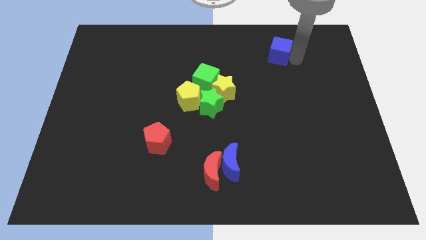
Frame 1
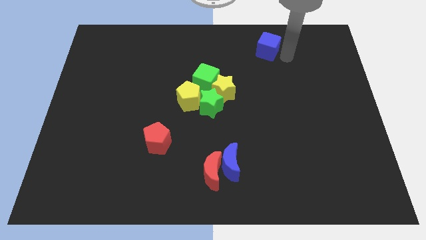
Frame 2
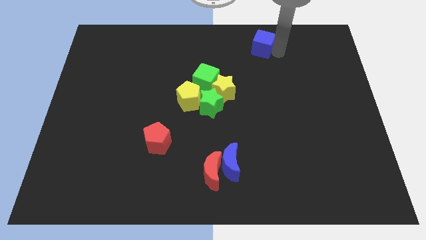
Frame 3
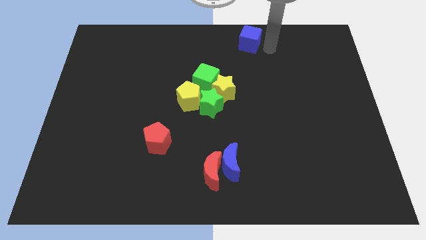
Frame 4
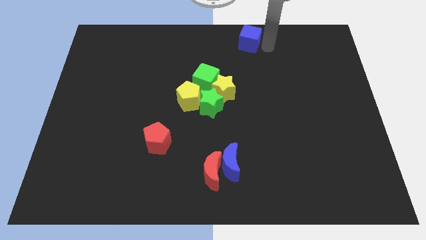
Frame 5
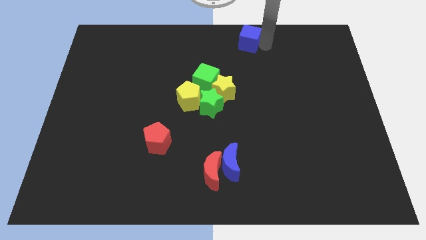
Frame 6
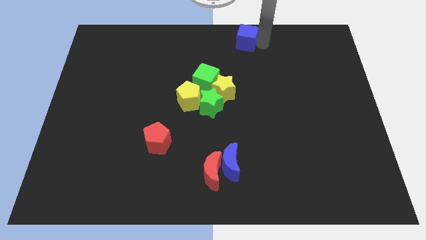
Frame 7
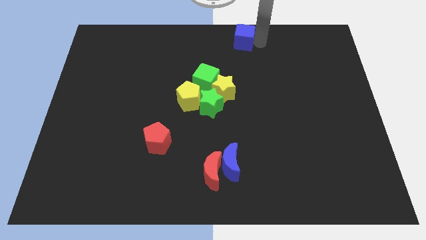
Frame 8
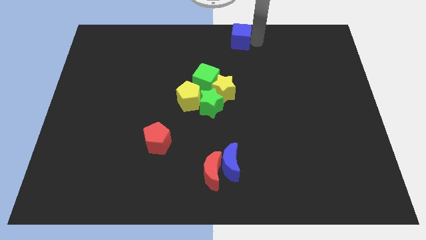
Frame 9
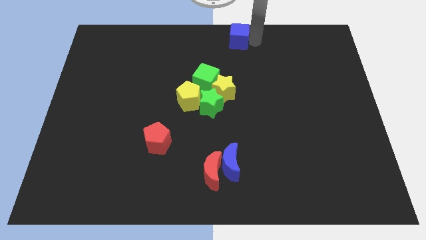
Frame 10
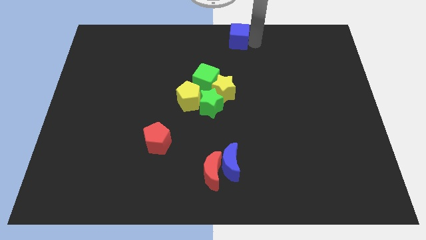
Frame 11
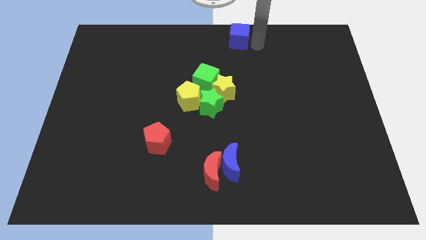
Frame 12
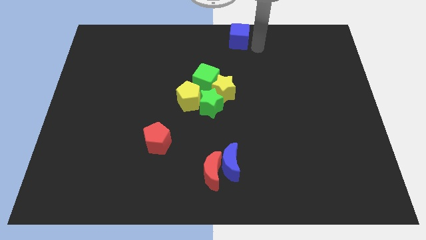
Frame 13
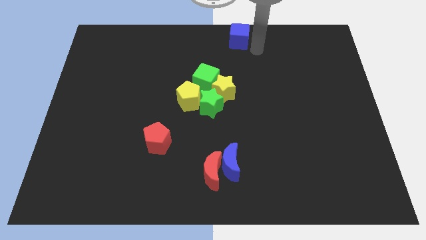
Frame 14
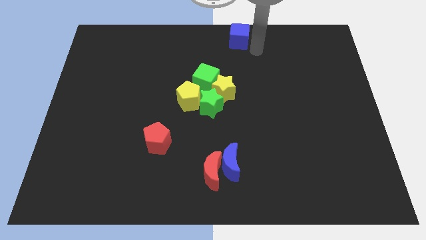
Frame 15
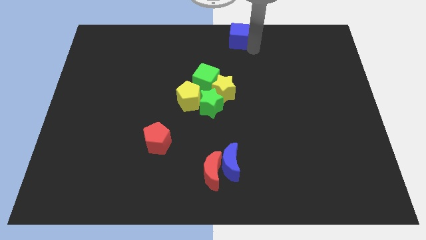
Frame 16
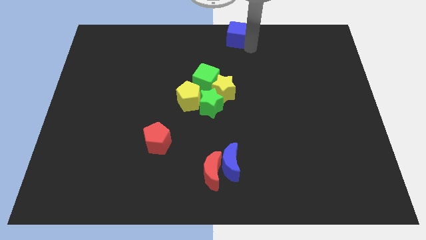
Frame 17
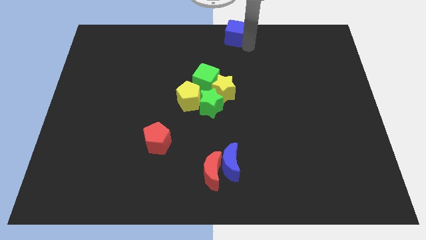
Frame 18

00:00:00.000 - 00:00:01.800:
push the blue cube at the top center of the board

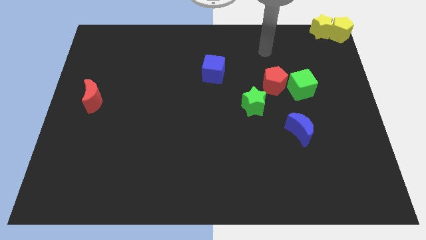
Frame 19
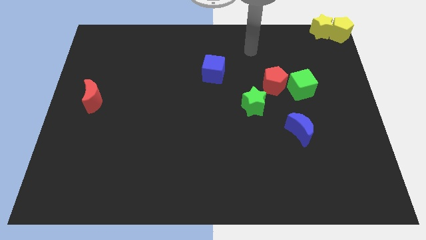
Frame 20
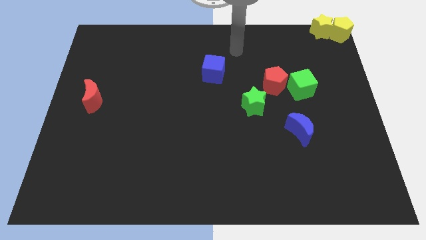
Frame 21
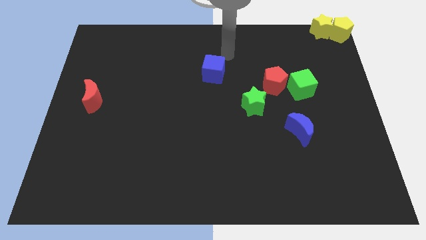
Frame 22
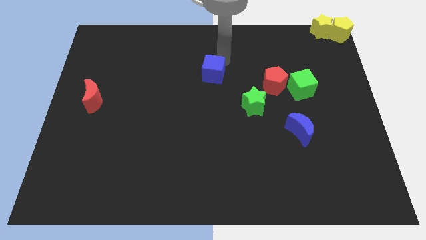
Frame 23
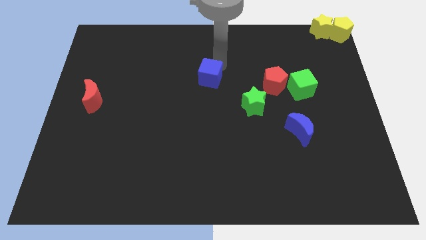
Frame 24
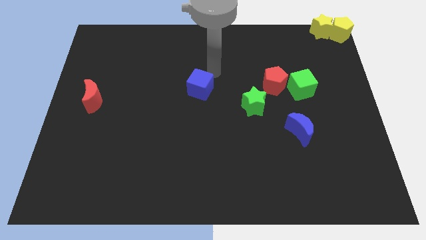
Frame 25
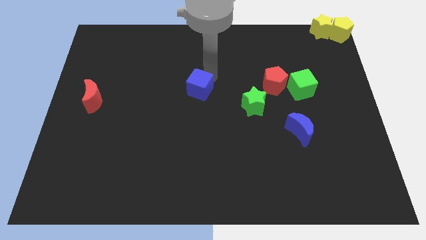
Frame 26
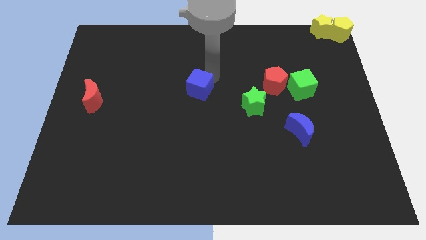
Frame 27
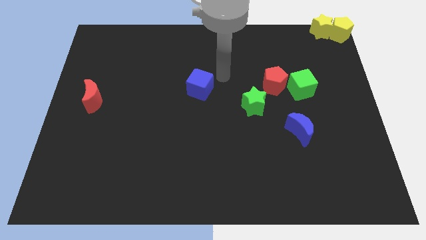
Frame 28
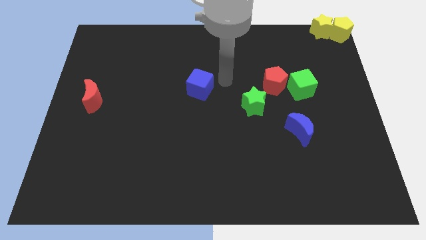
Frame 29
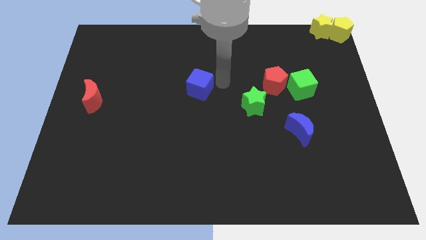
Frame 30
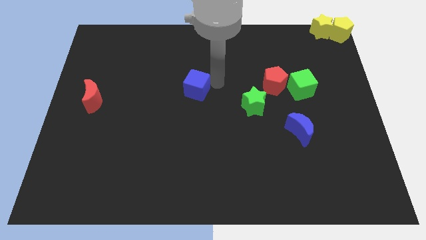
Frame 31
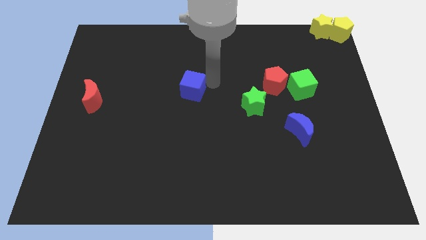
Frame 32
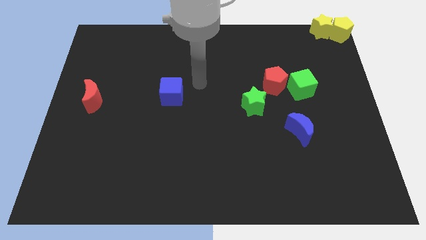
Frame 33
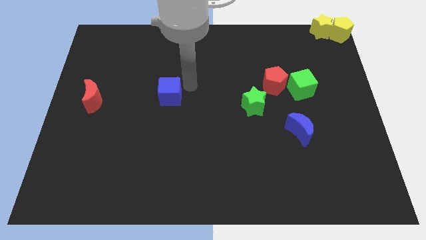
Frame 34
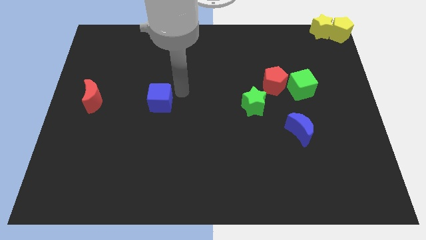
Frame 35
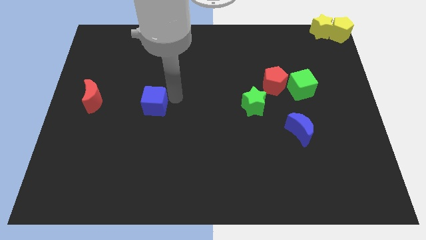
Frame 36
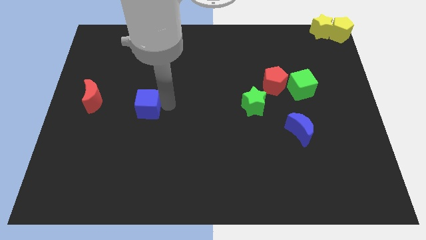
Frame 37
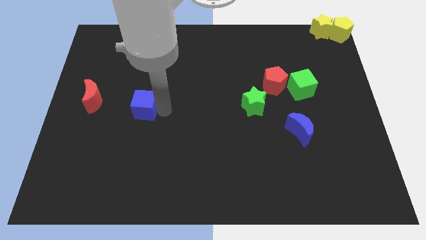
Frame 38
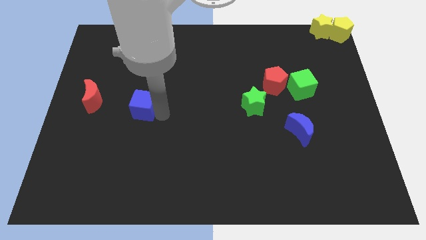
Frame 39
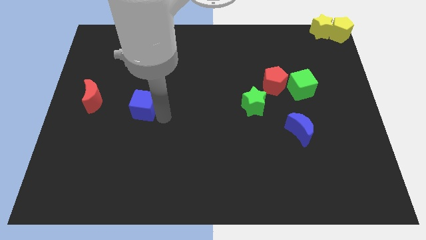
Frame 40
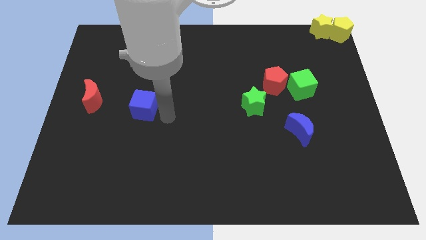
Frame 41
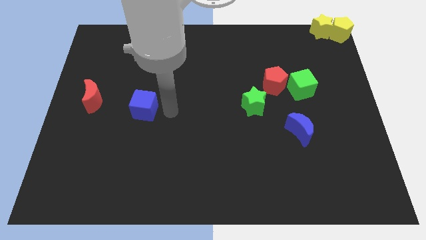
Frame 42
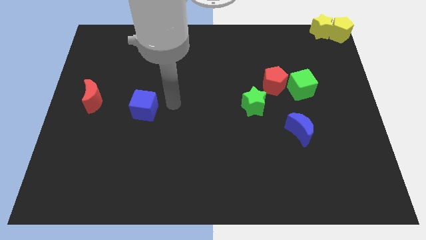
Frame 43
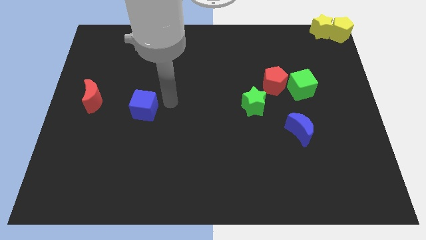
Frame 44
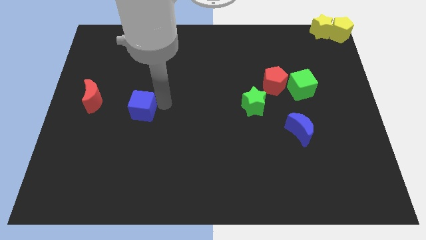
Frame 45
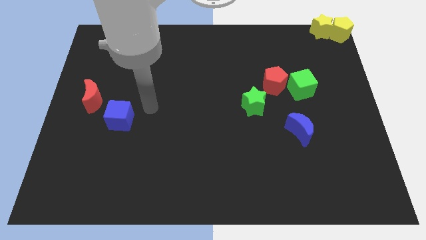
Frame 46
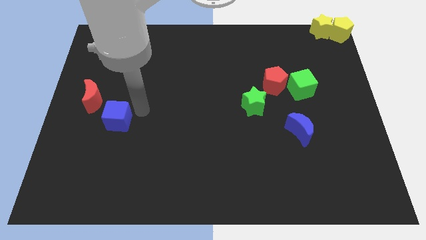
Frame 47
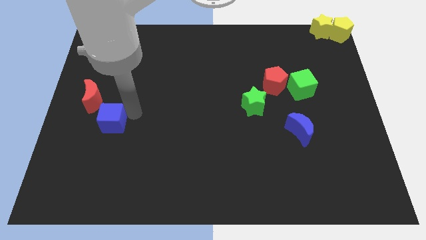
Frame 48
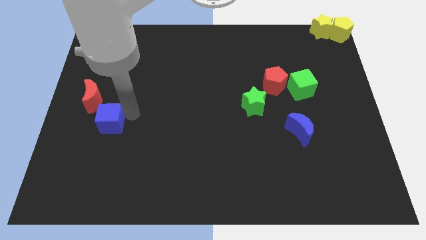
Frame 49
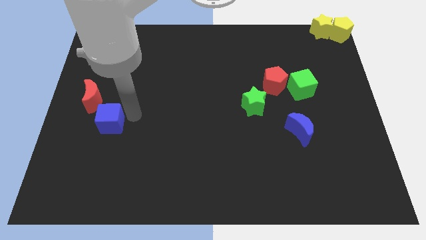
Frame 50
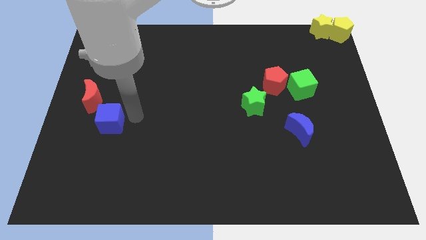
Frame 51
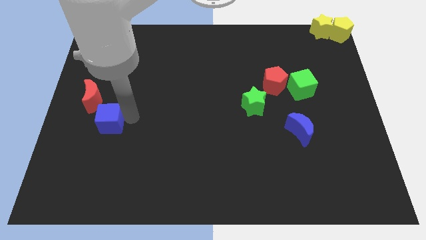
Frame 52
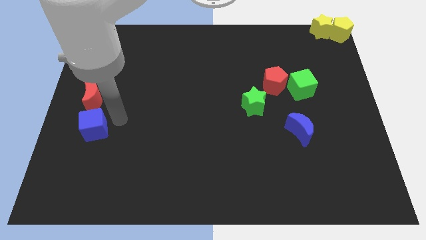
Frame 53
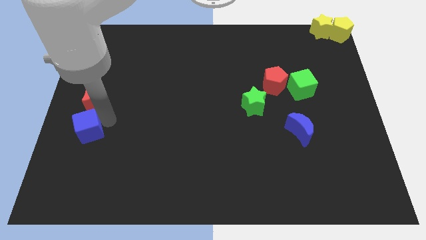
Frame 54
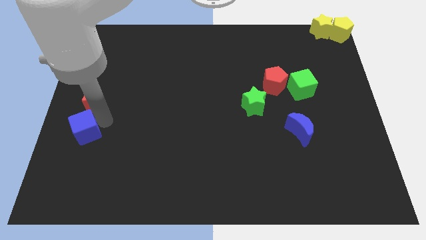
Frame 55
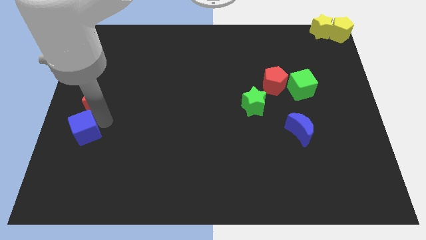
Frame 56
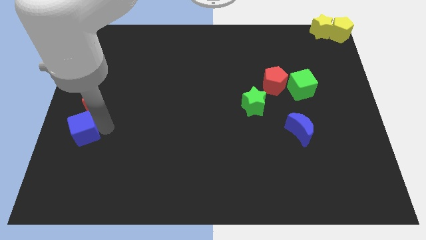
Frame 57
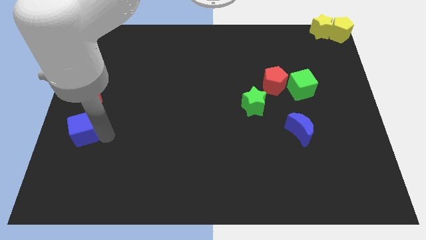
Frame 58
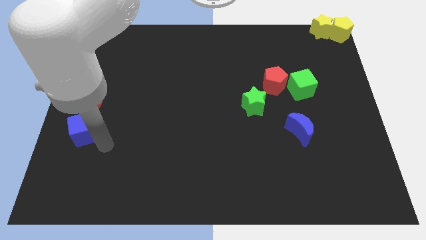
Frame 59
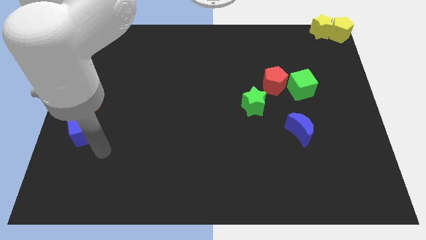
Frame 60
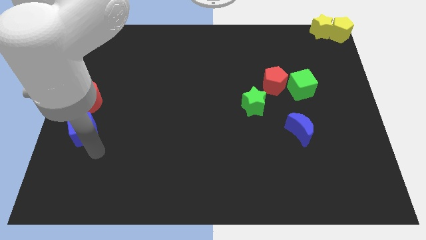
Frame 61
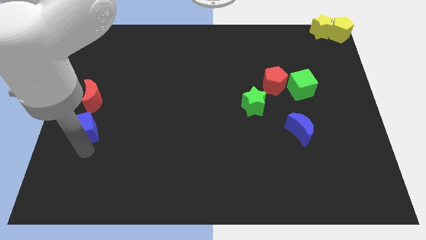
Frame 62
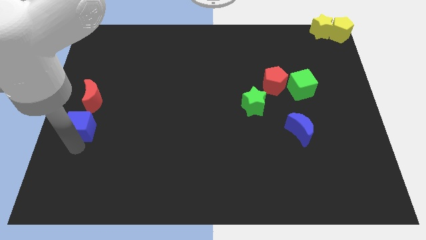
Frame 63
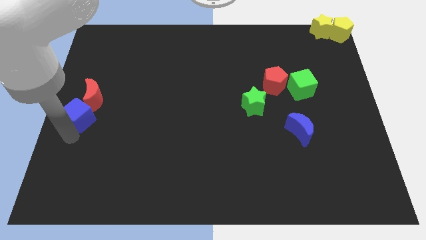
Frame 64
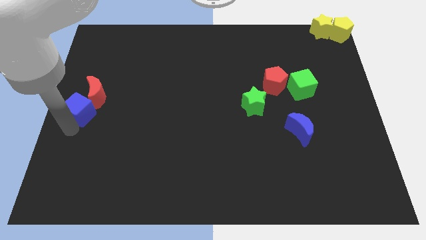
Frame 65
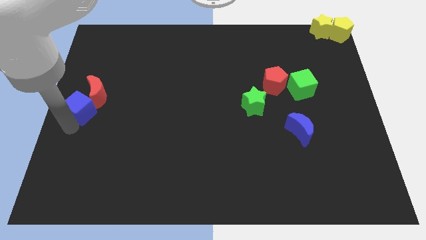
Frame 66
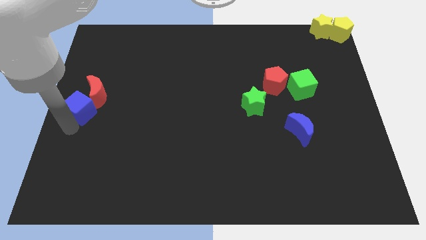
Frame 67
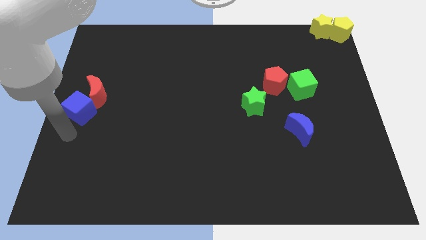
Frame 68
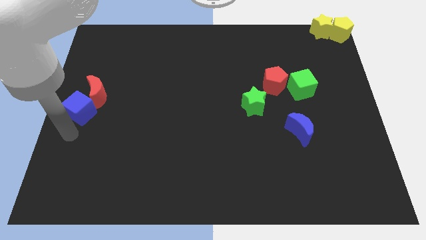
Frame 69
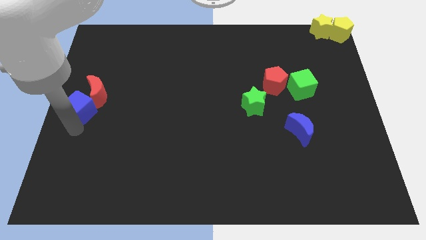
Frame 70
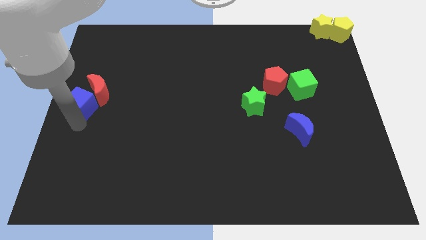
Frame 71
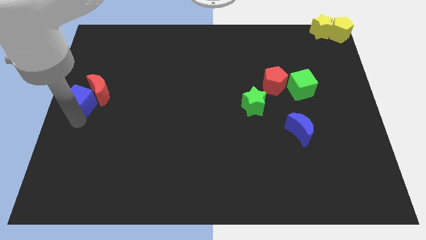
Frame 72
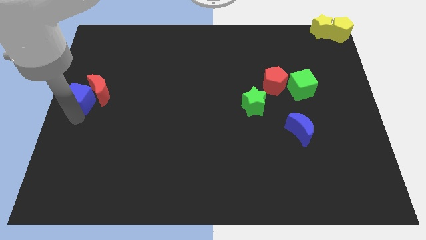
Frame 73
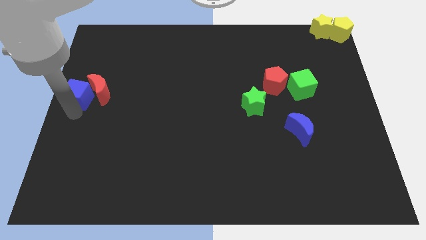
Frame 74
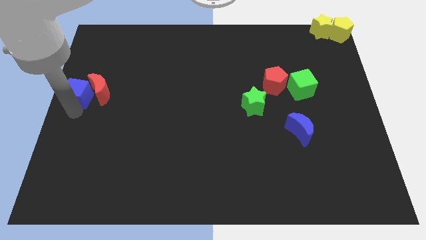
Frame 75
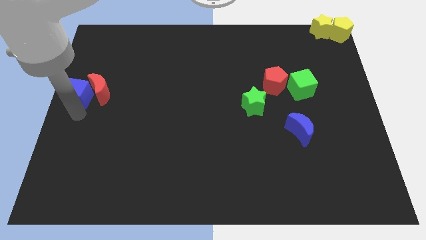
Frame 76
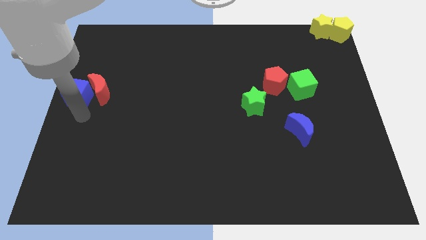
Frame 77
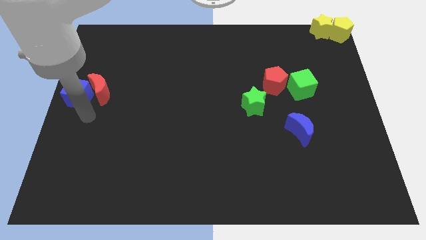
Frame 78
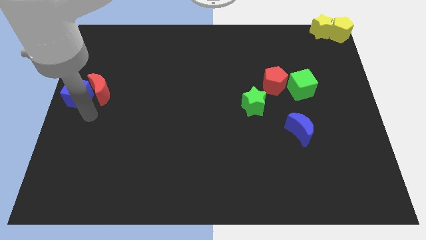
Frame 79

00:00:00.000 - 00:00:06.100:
place the blue cube to the left of the red moon
